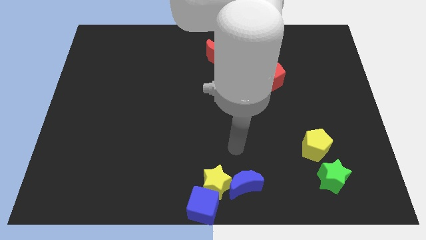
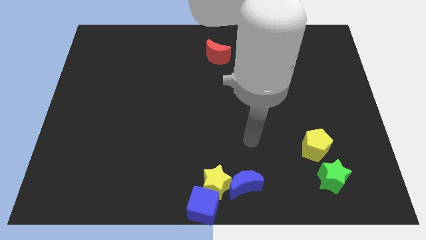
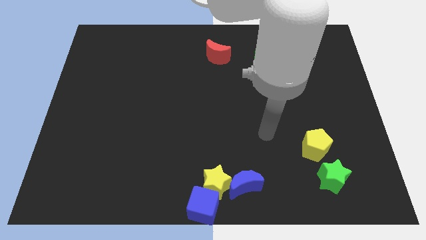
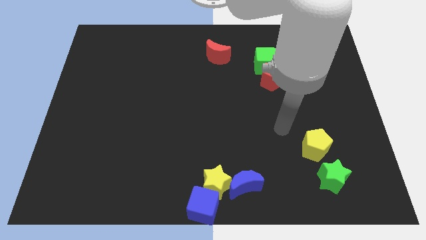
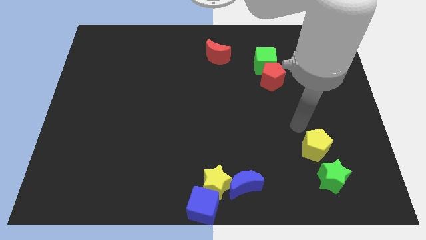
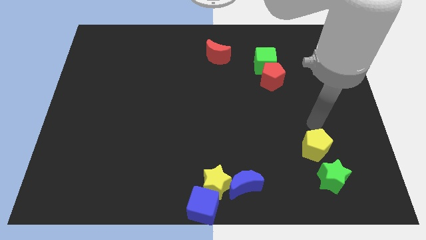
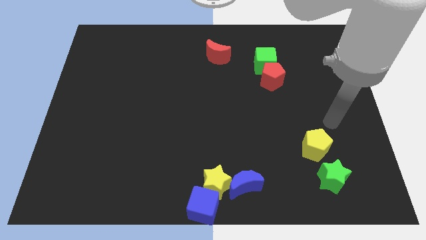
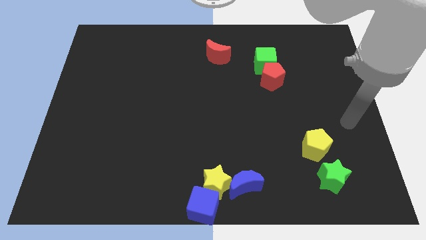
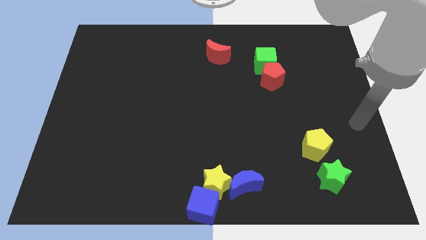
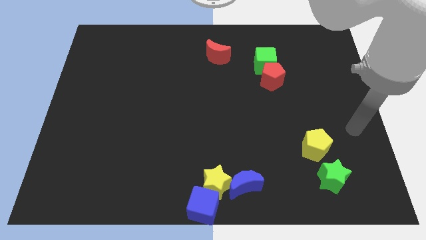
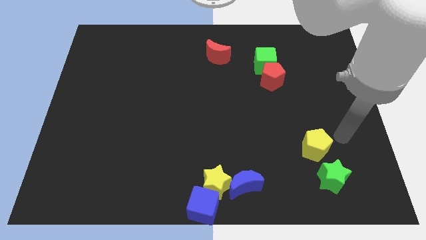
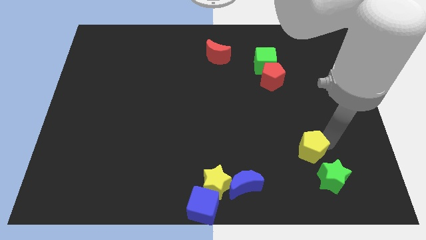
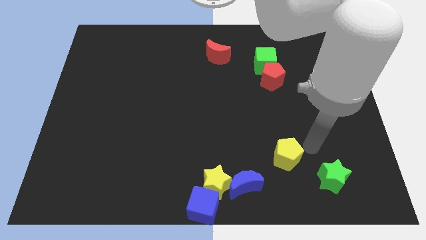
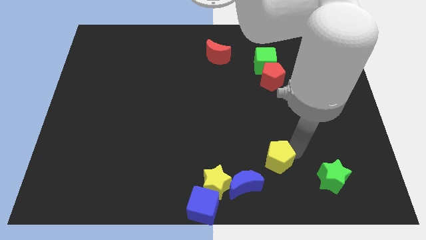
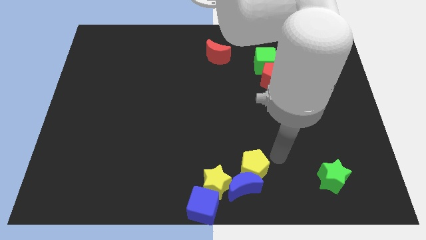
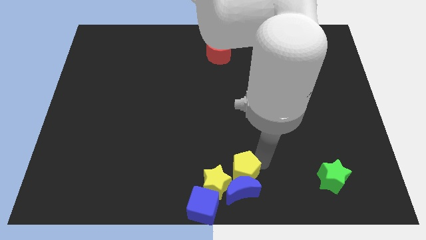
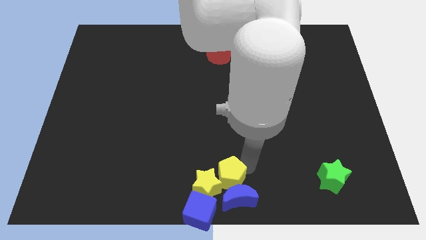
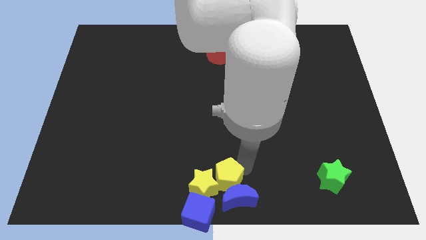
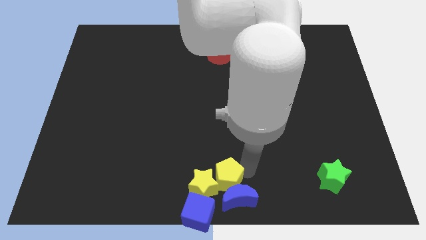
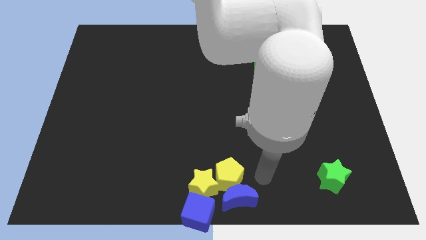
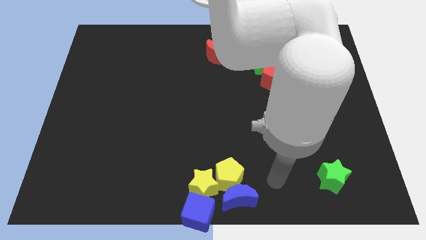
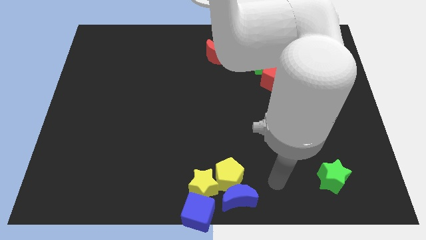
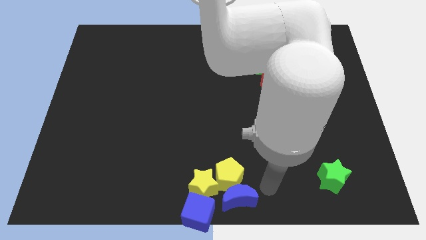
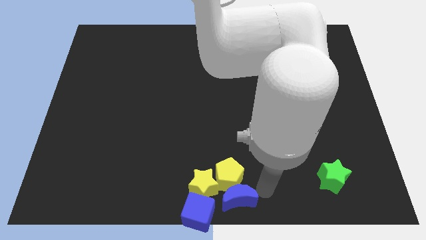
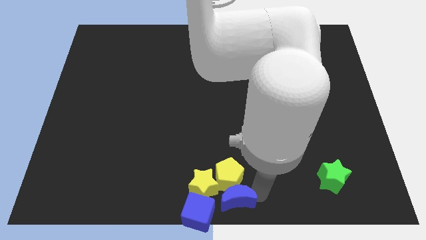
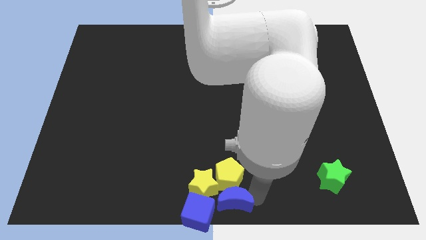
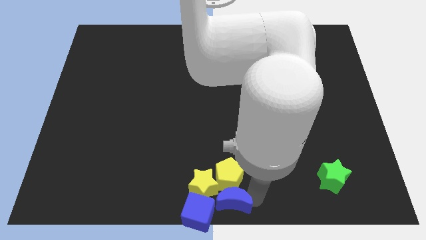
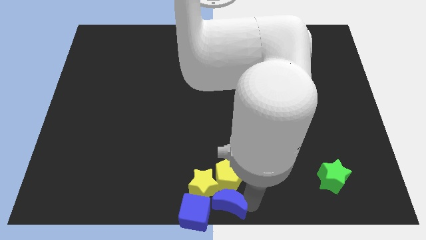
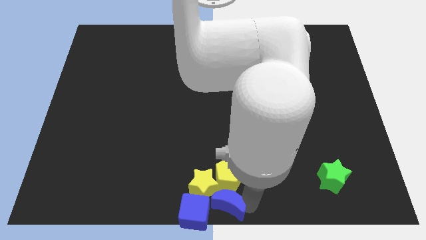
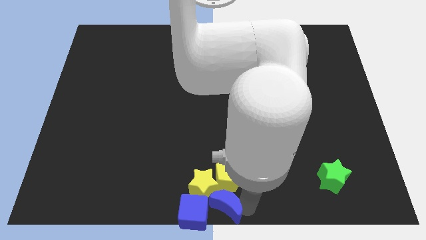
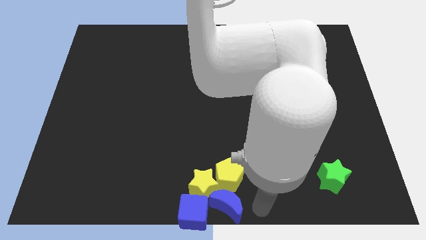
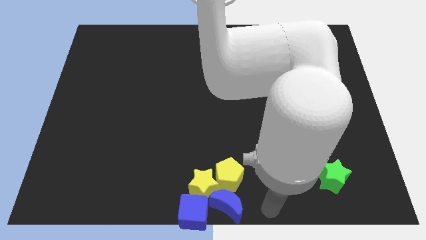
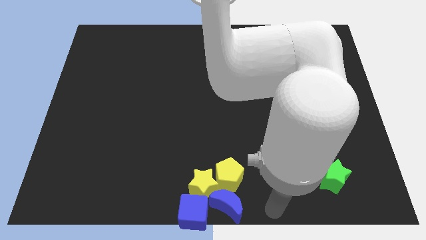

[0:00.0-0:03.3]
move the yellow pentagon and blue moon to make group of yellow and blue blocks

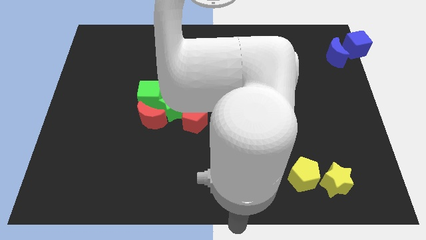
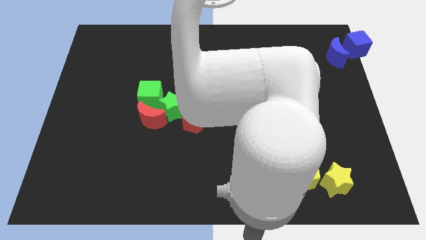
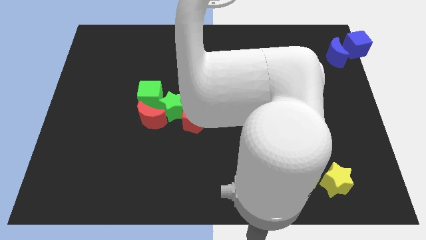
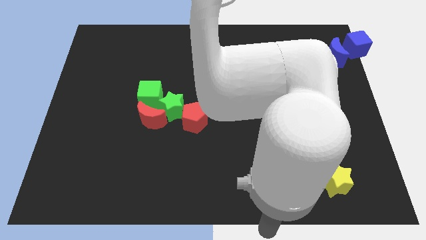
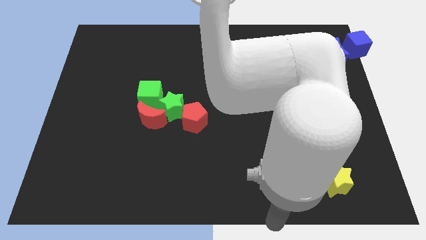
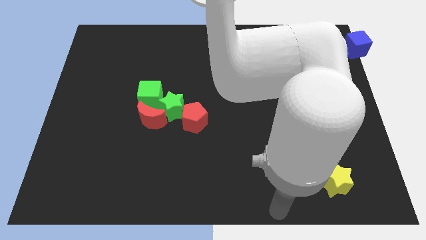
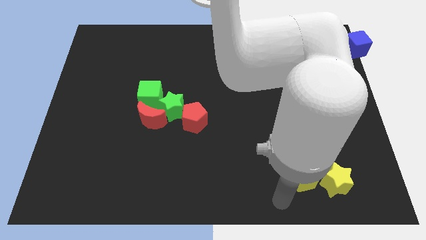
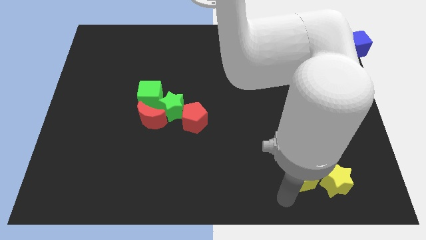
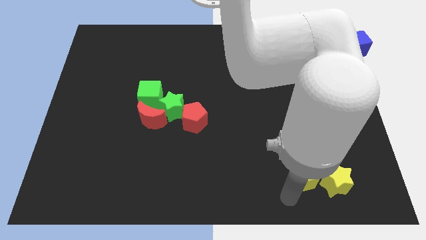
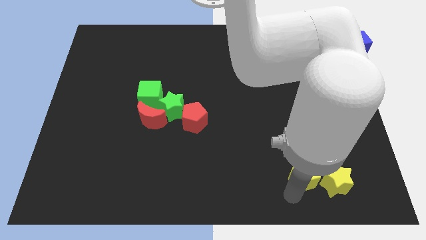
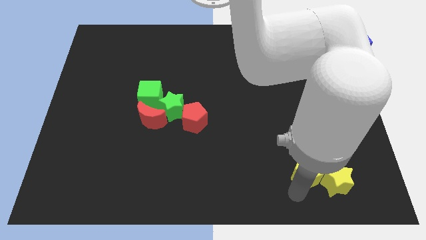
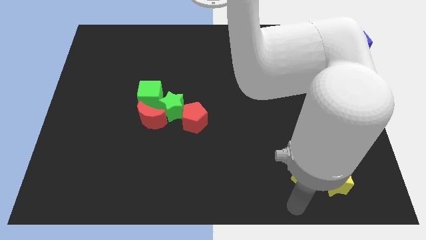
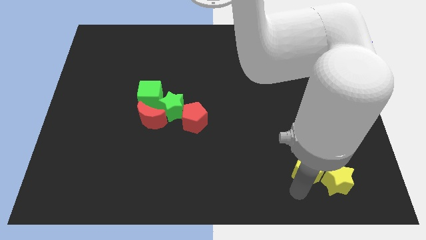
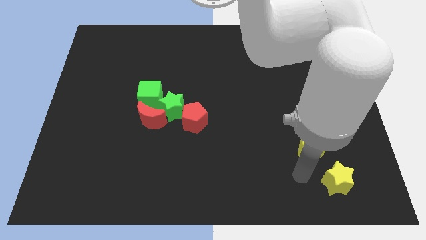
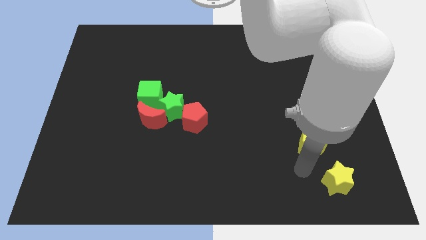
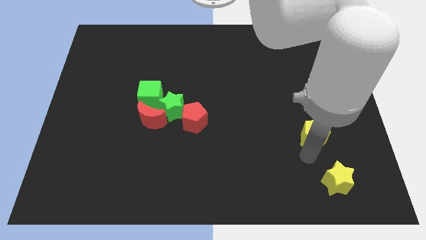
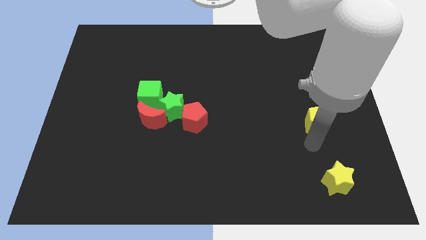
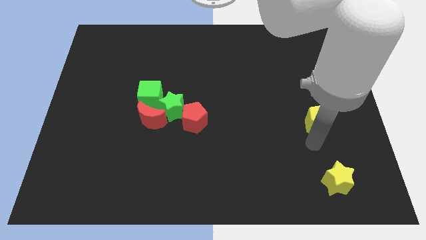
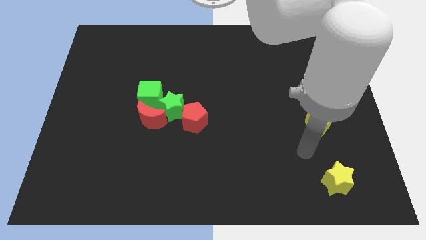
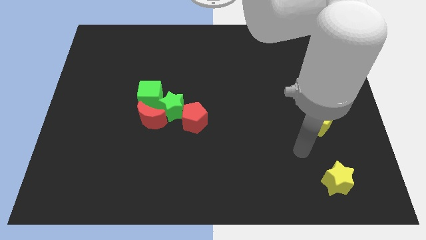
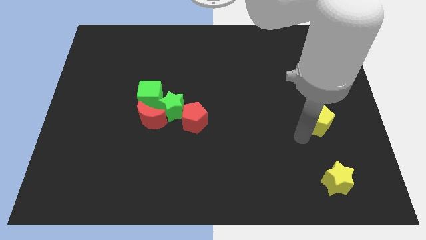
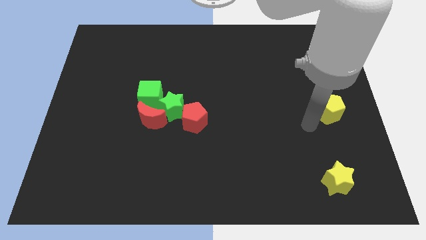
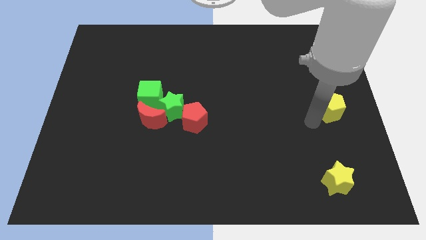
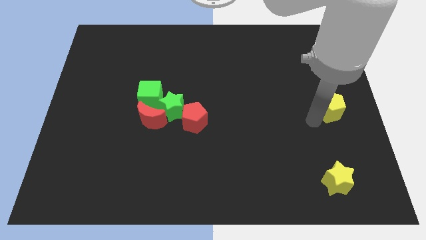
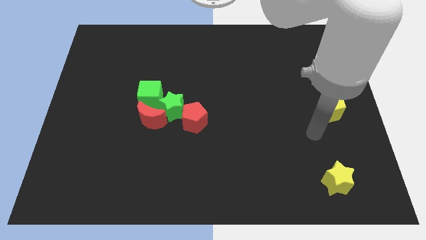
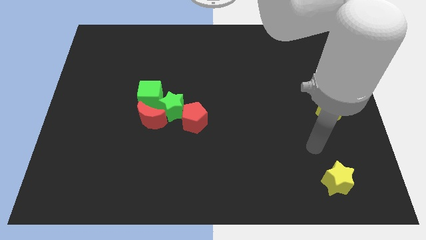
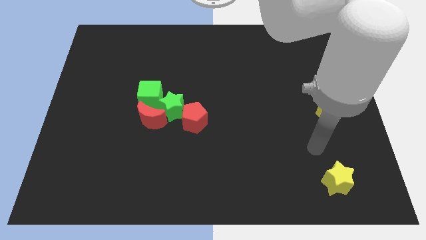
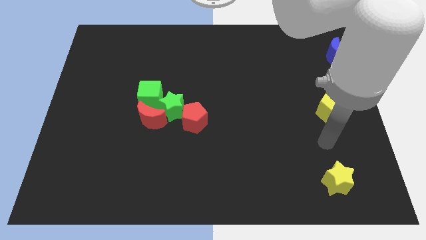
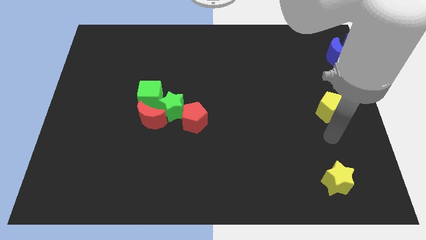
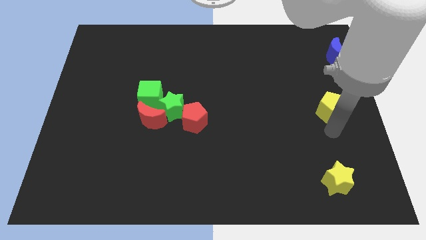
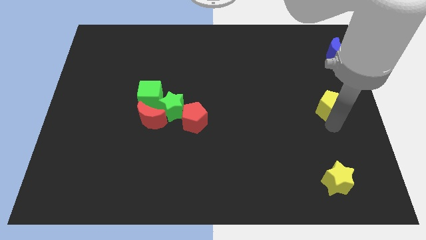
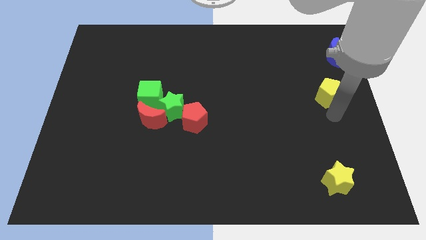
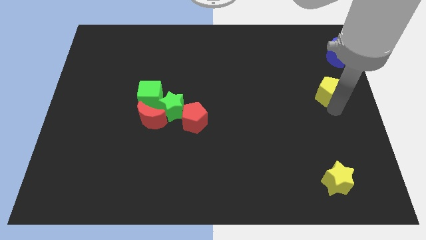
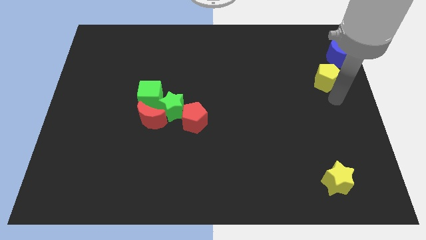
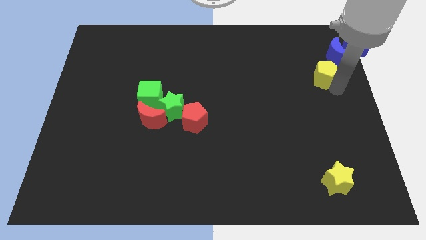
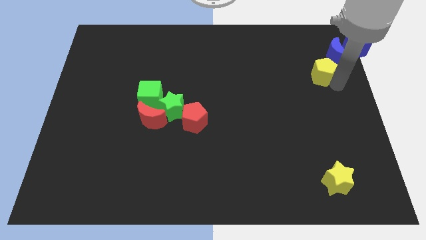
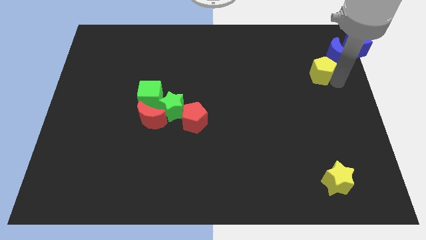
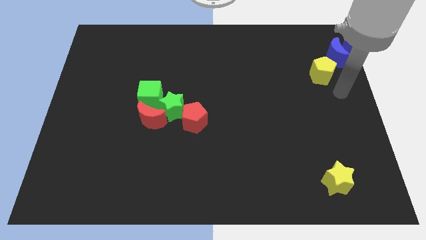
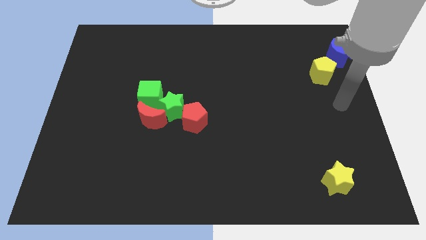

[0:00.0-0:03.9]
move the yellow pentagon close to the blue moon

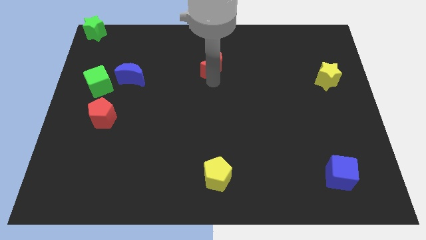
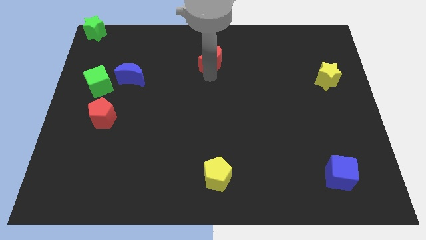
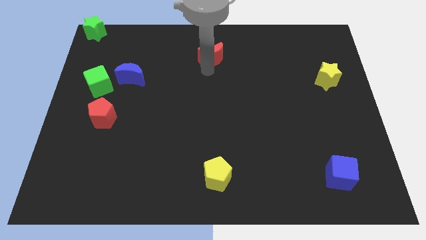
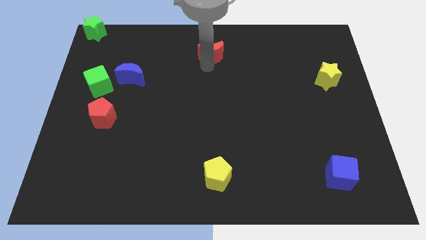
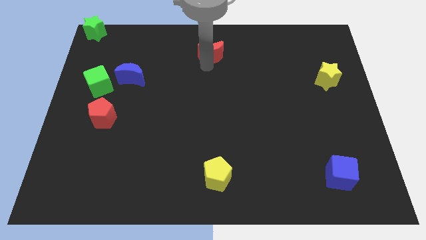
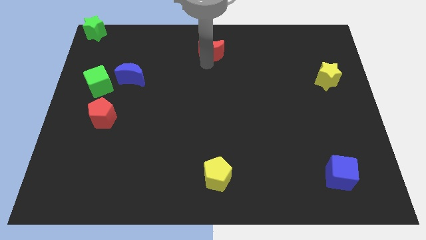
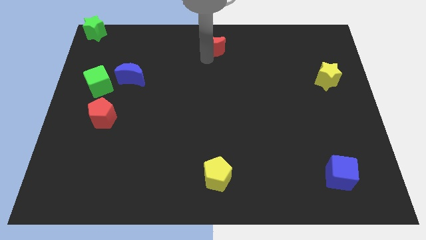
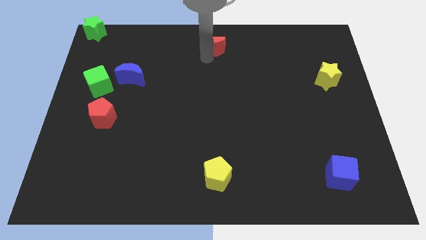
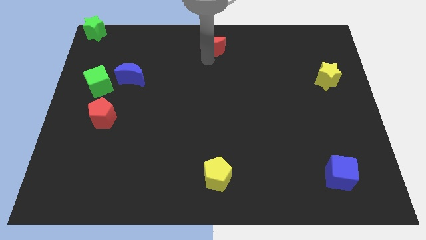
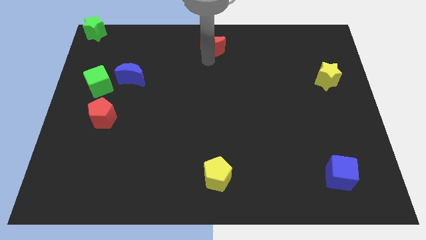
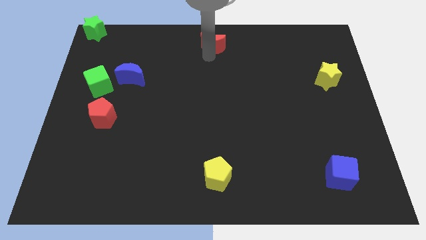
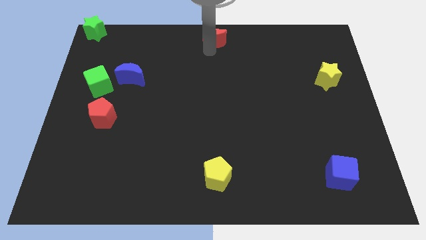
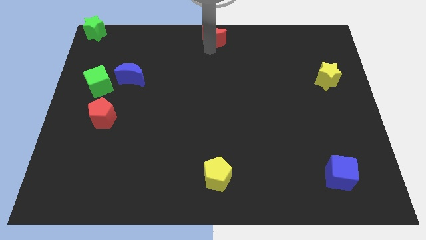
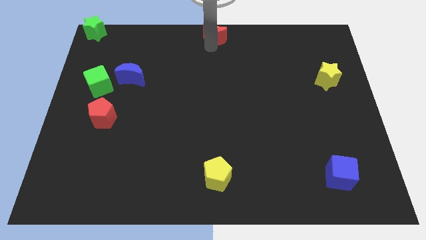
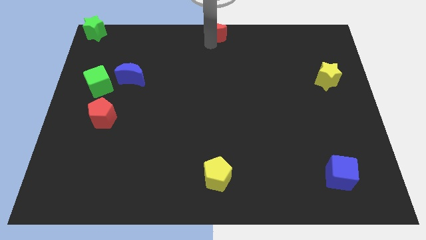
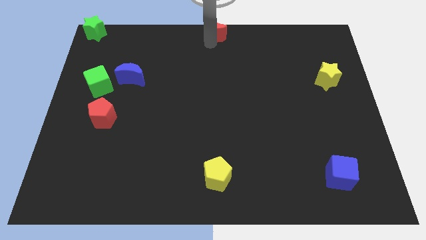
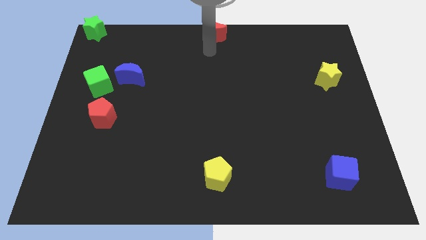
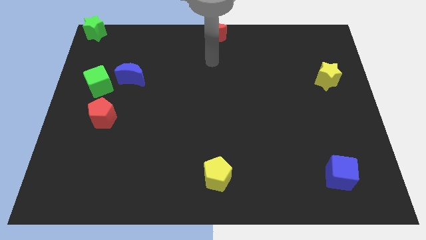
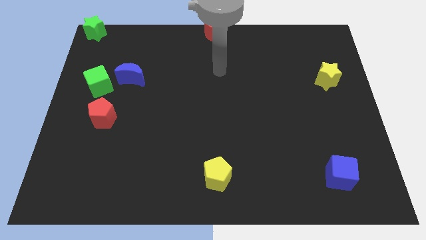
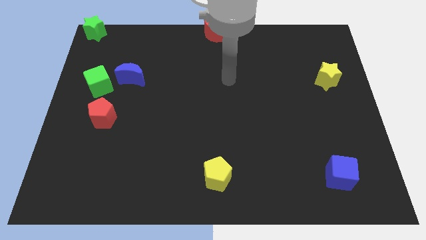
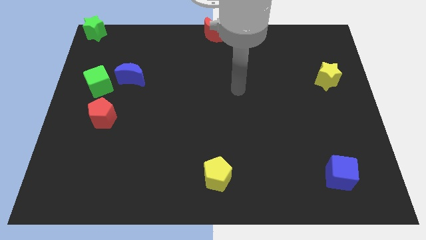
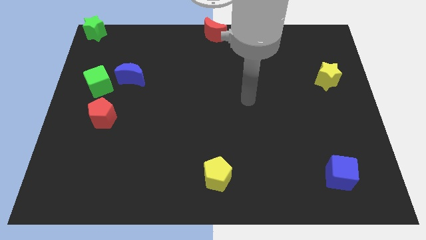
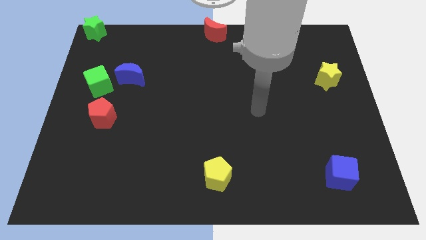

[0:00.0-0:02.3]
move the red moon to the top middle
